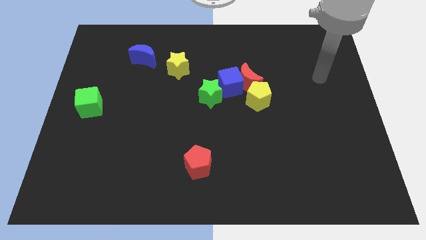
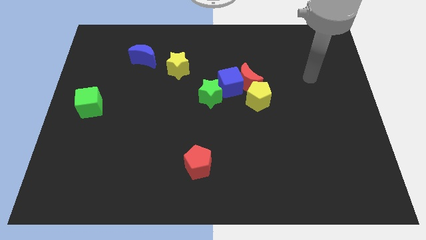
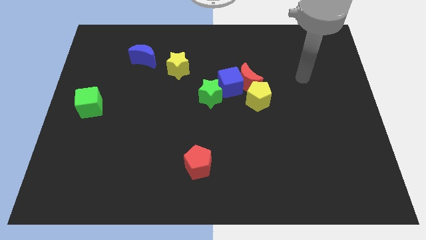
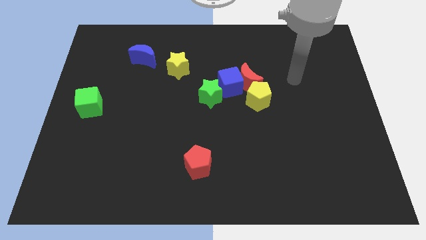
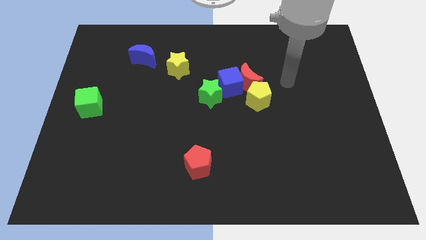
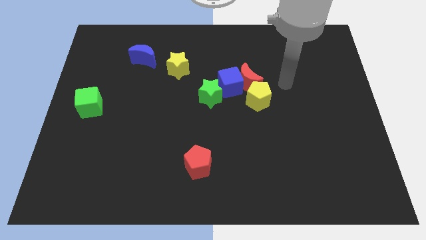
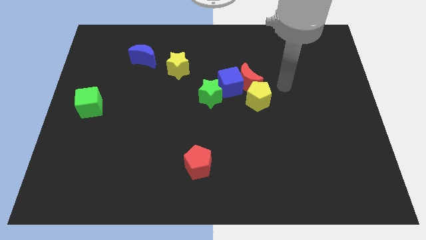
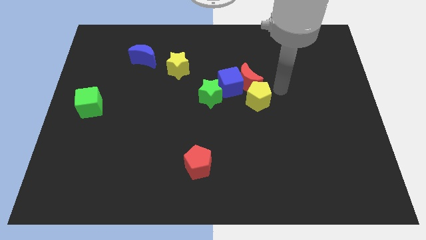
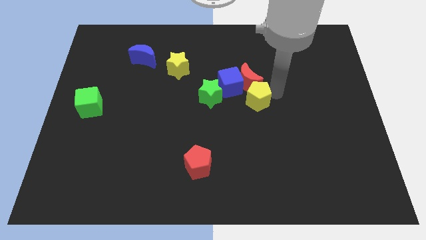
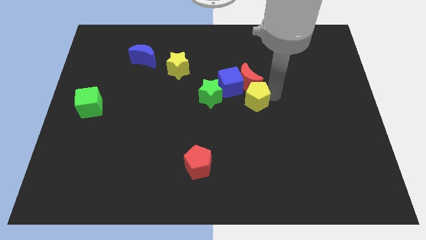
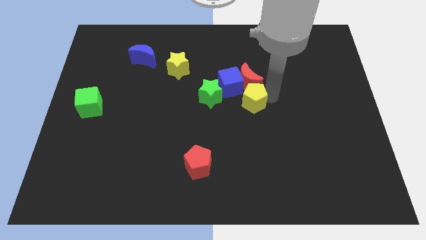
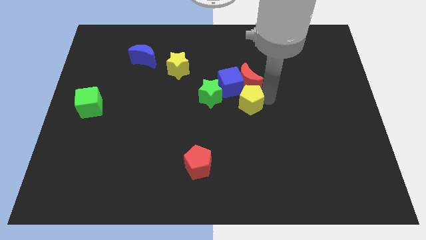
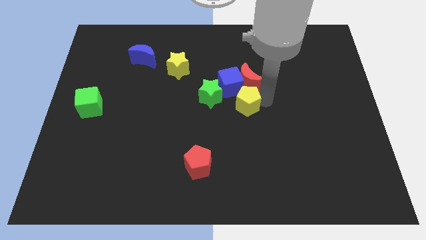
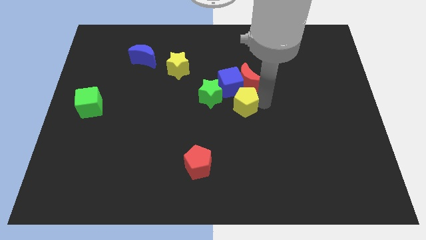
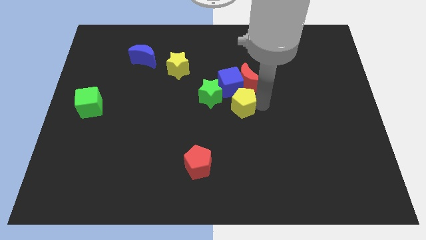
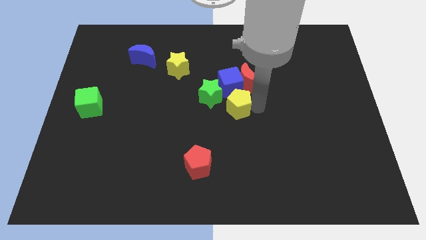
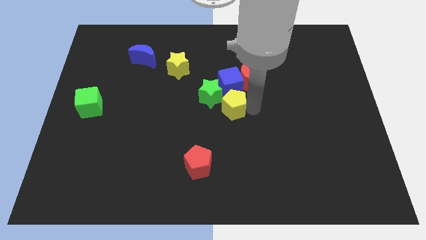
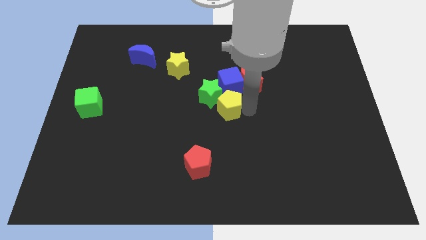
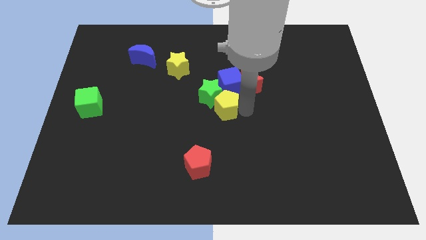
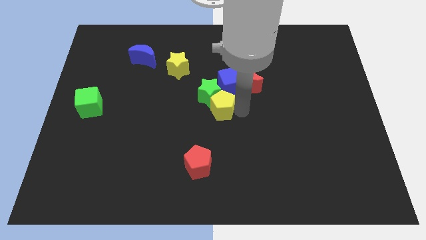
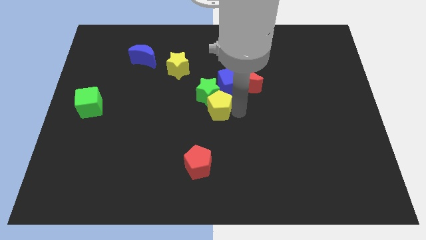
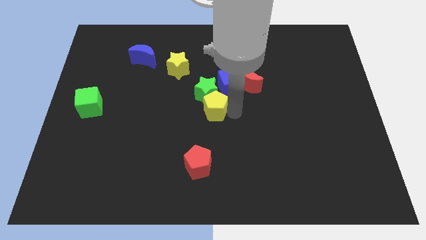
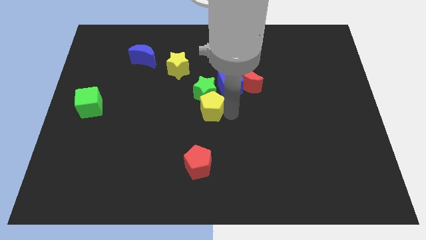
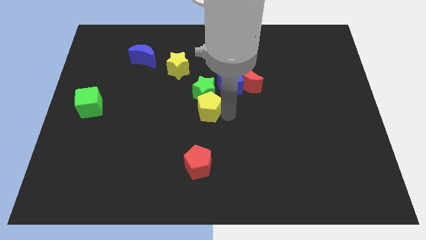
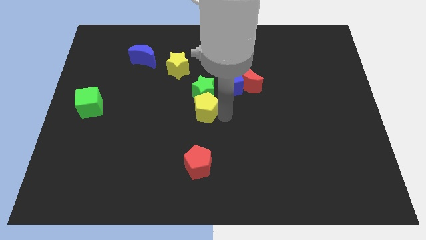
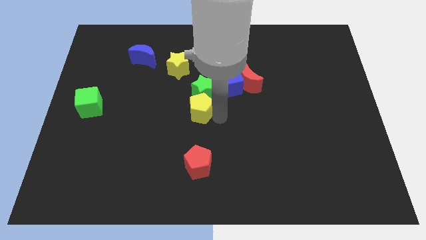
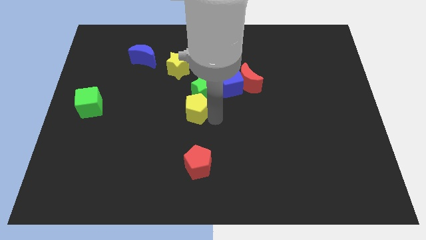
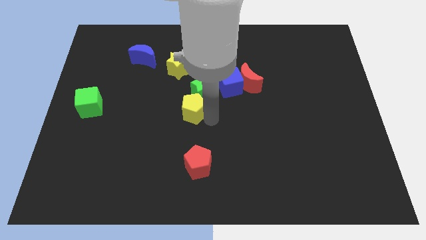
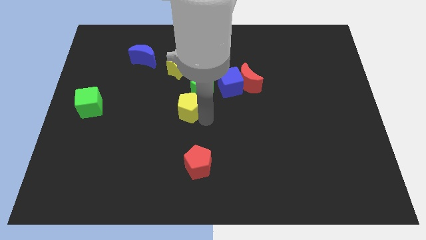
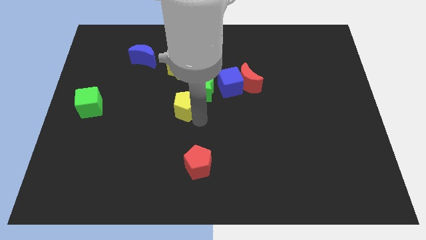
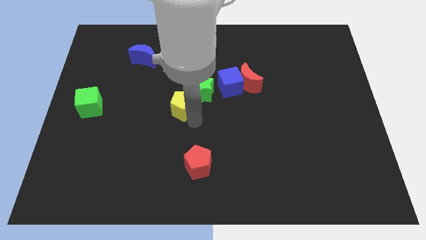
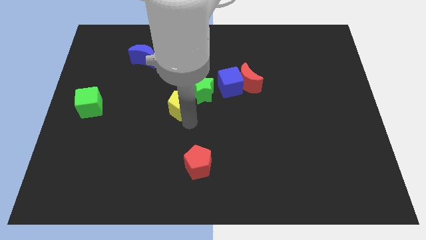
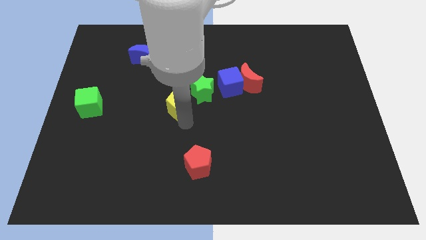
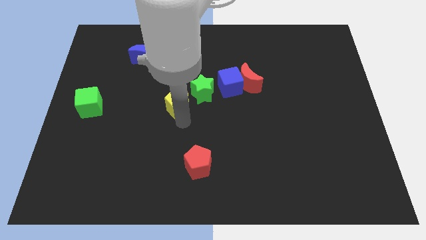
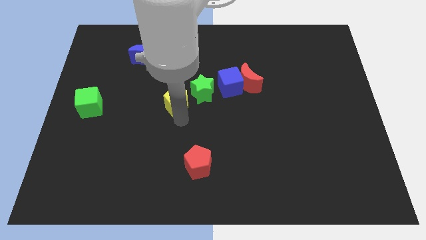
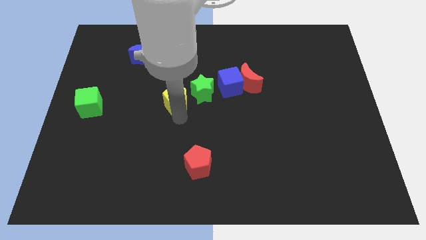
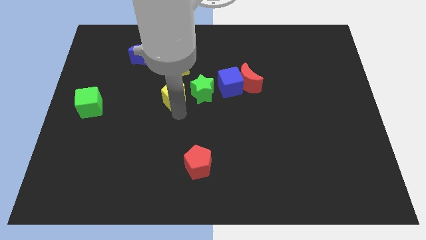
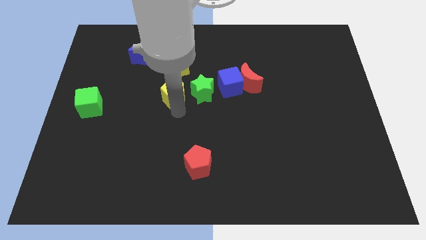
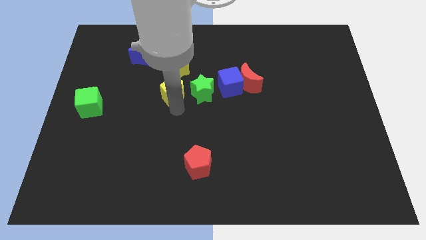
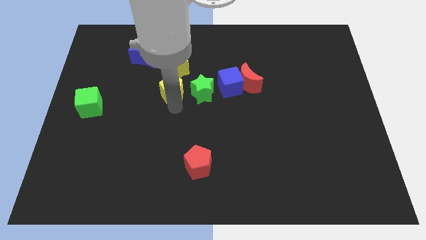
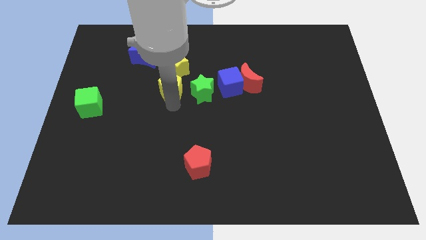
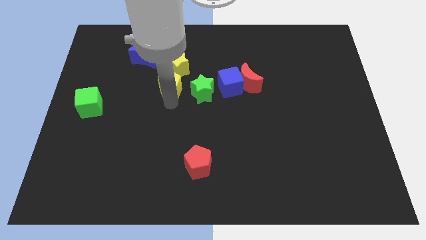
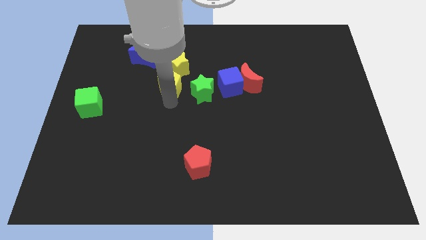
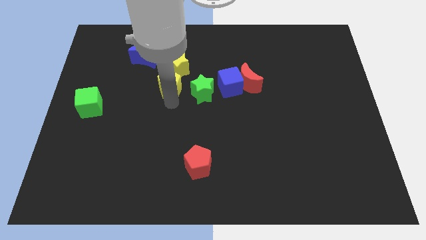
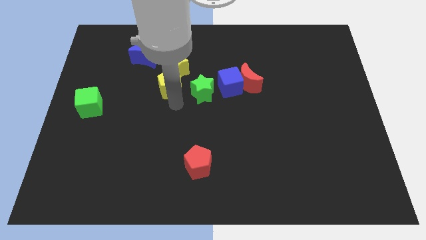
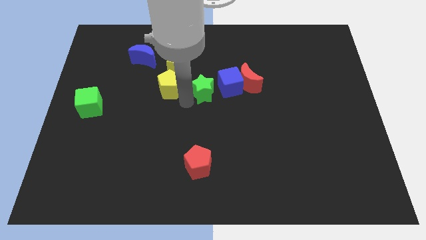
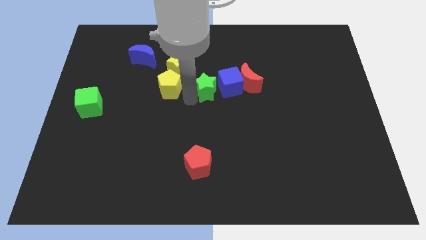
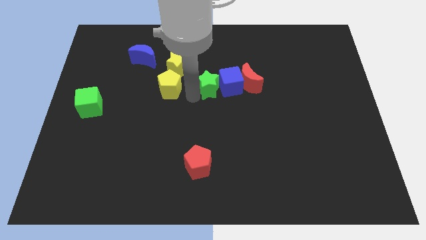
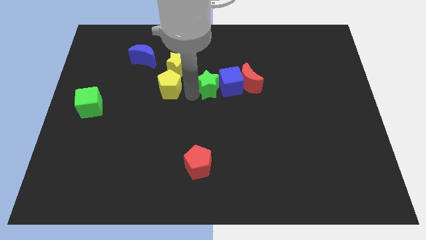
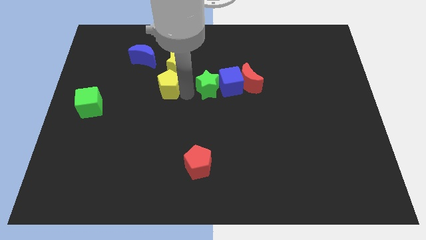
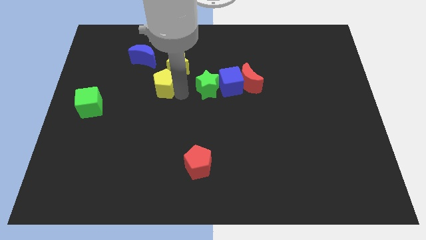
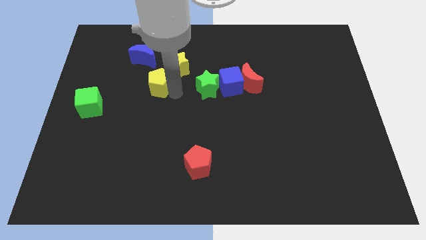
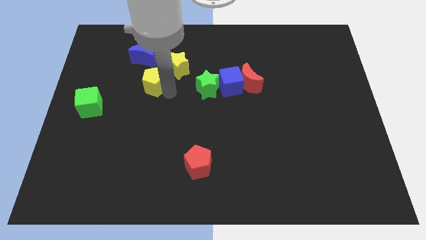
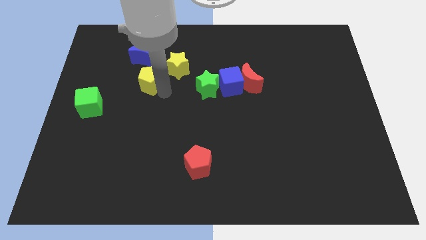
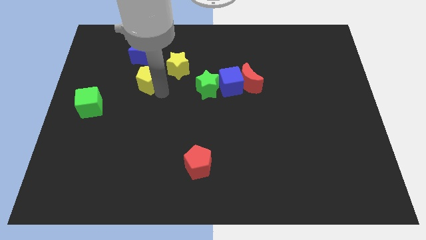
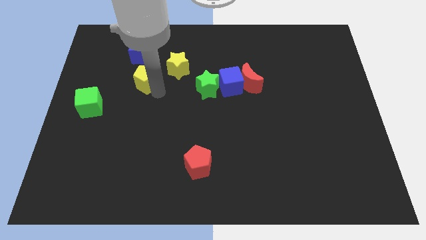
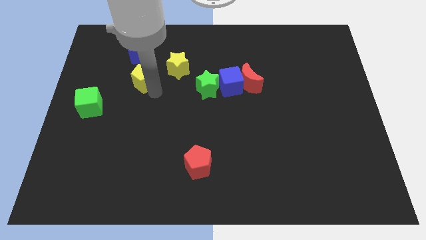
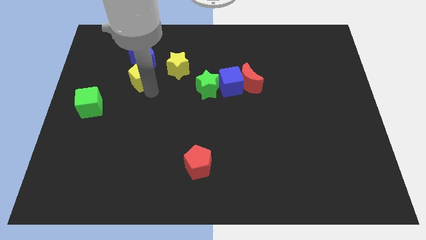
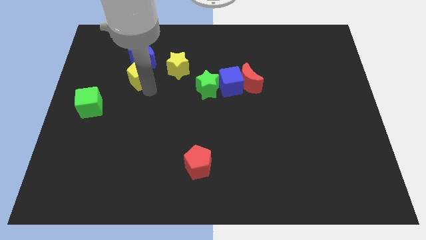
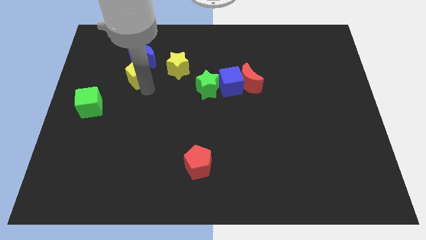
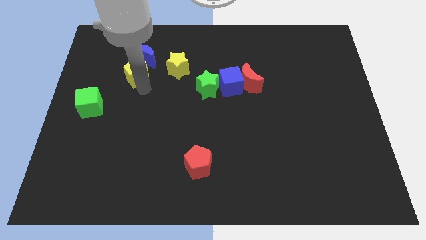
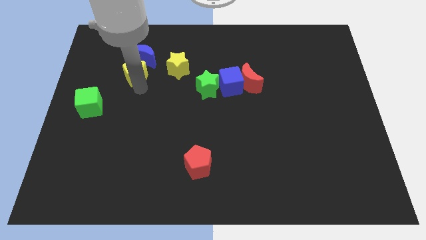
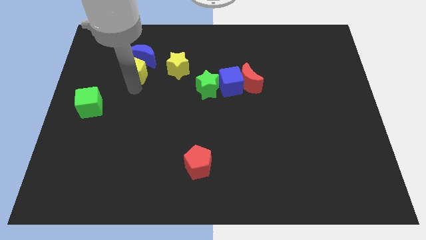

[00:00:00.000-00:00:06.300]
slide the yellow pentagon close to the blue moon

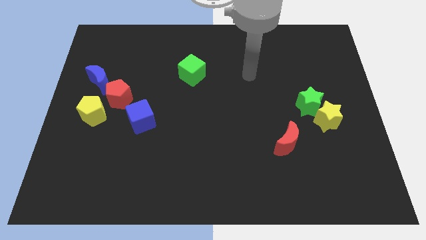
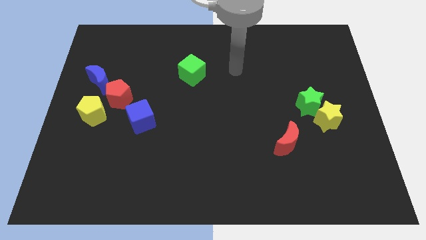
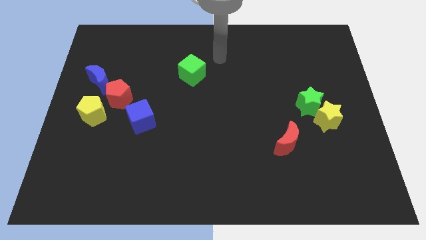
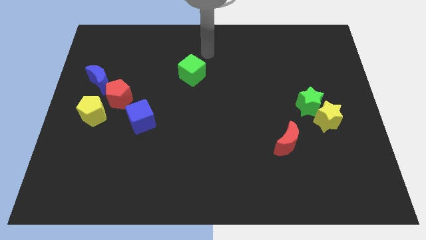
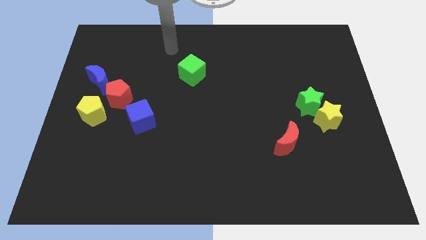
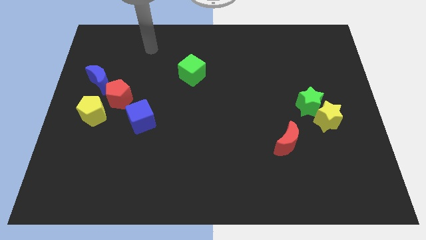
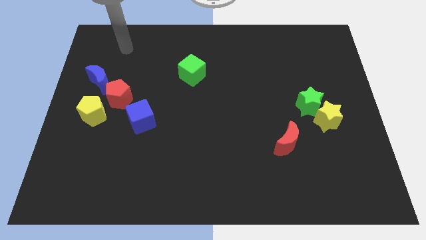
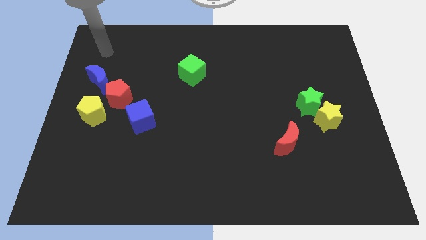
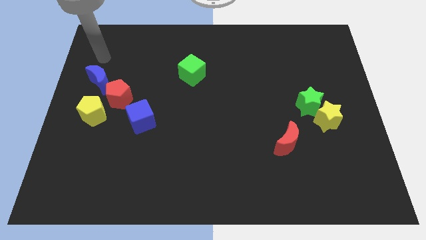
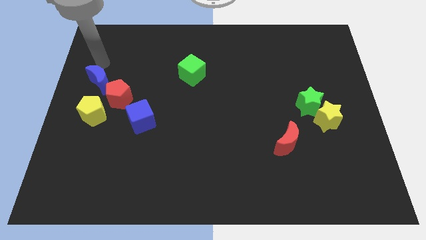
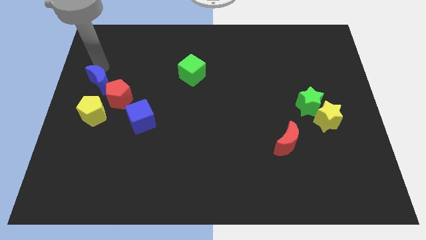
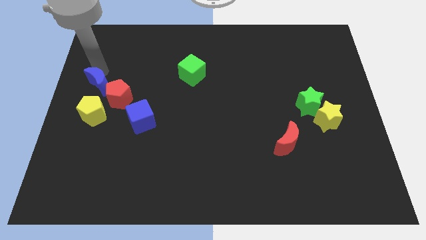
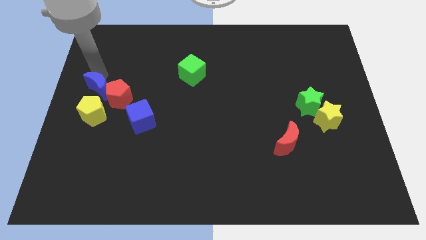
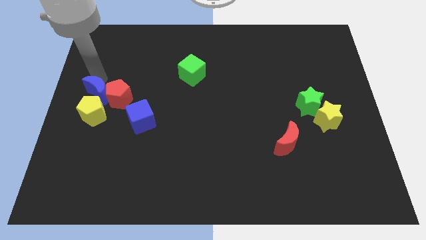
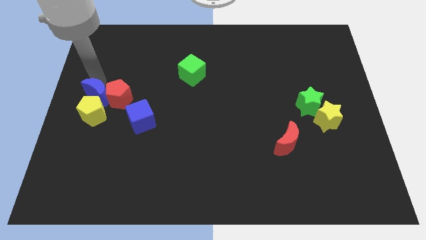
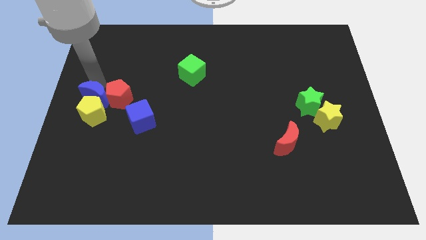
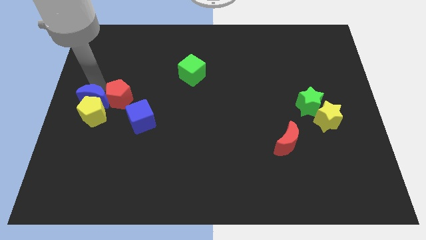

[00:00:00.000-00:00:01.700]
put the blue moon to the yellow pentagon

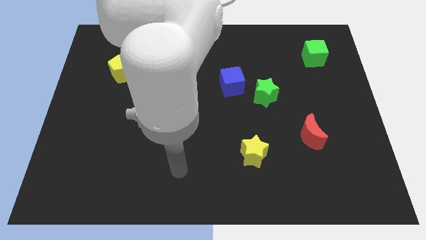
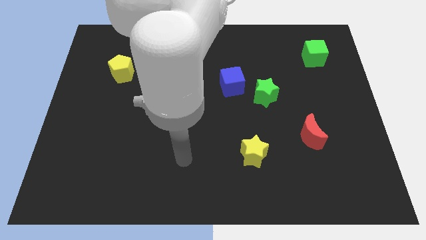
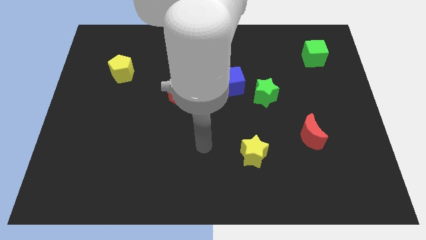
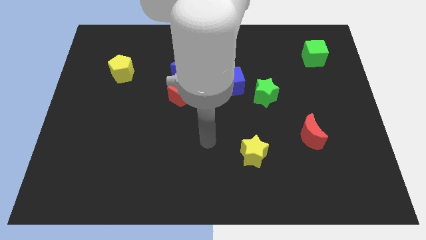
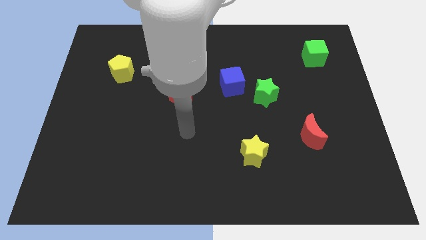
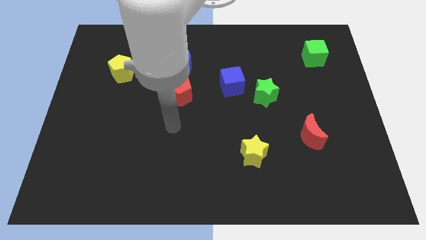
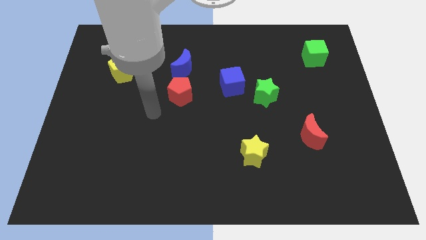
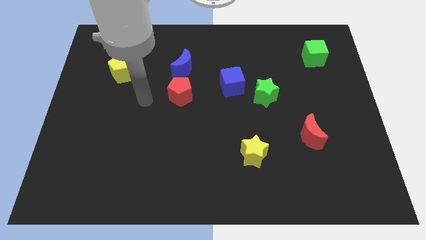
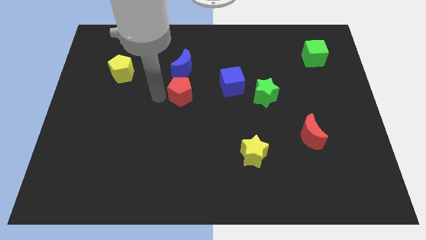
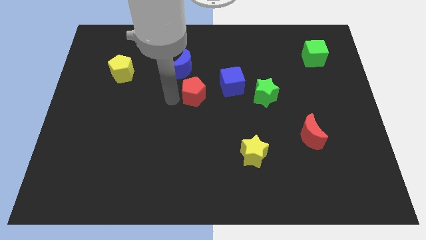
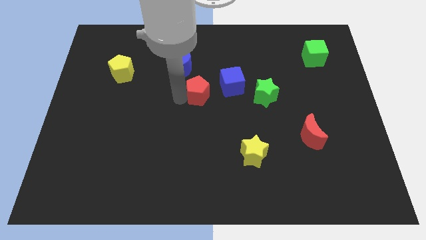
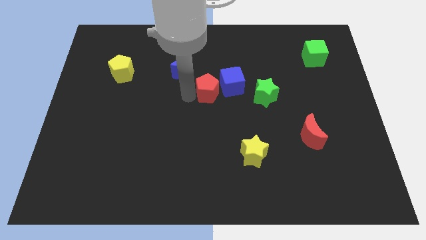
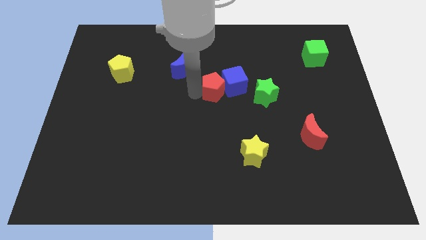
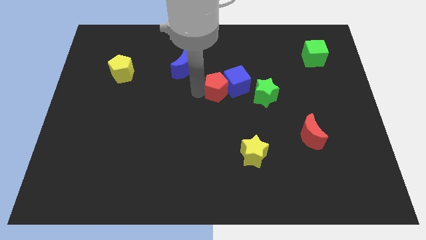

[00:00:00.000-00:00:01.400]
slide the red pentagon close to the blue cube
